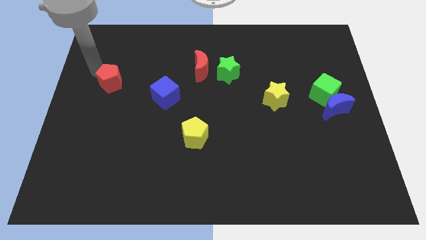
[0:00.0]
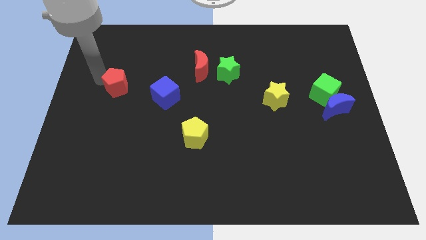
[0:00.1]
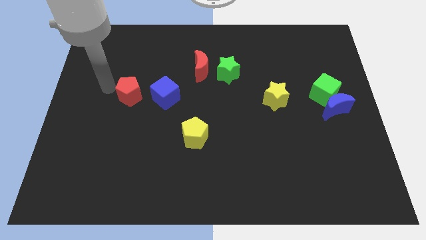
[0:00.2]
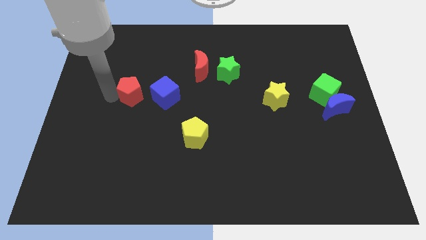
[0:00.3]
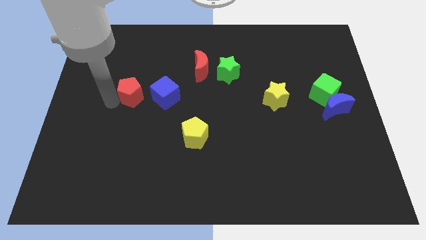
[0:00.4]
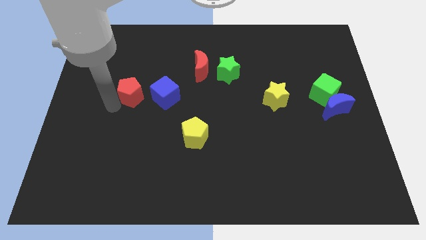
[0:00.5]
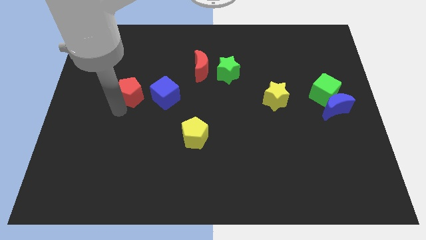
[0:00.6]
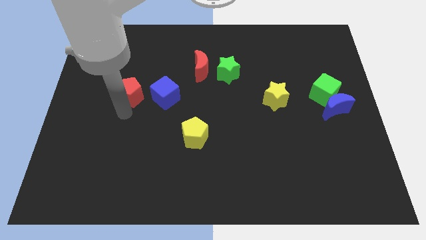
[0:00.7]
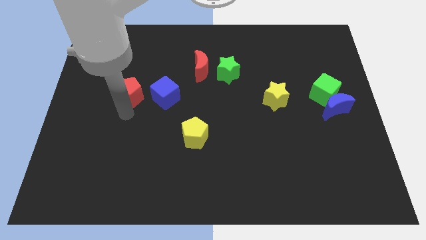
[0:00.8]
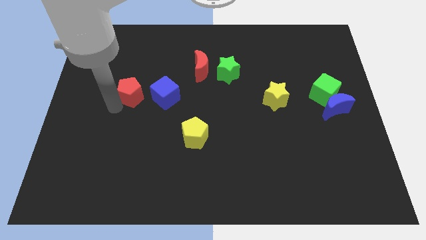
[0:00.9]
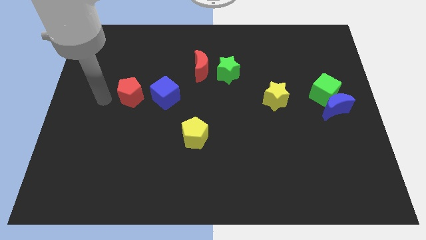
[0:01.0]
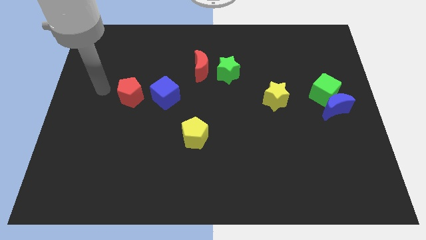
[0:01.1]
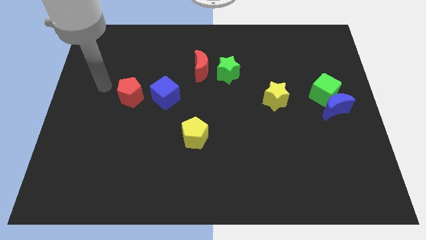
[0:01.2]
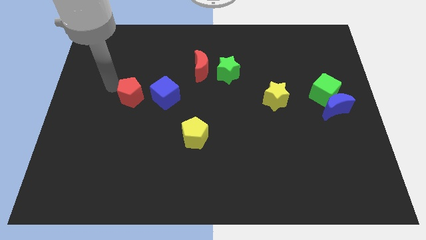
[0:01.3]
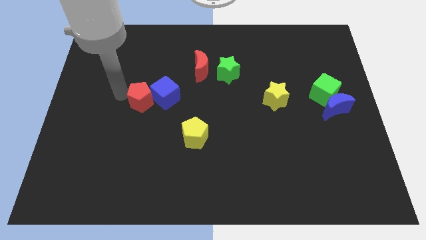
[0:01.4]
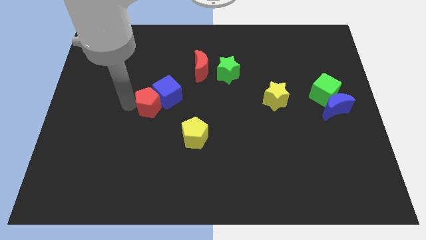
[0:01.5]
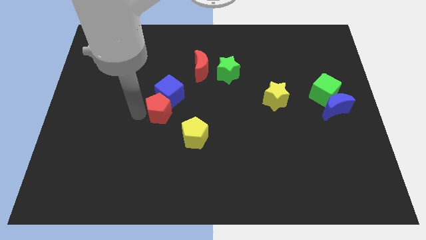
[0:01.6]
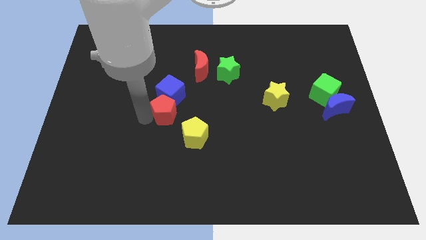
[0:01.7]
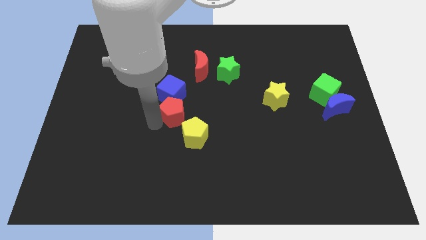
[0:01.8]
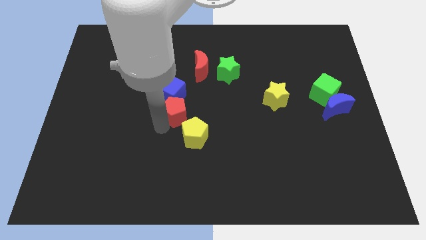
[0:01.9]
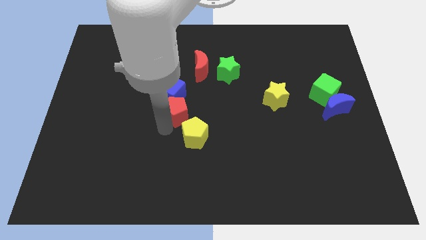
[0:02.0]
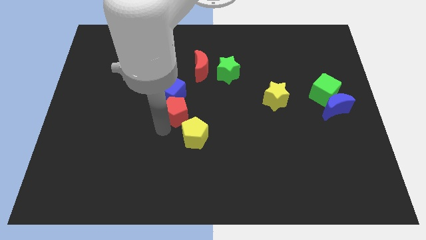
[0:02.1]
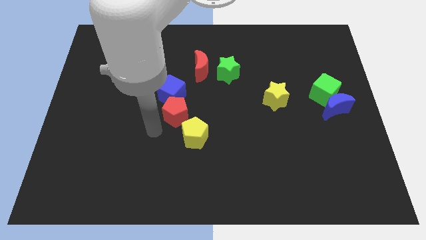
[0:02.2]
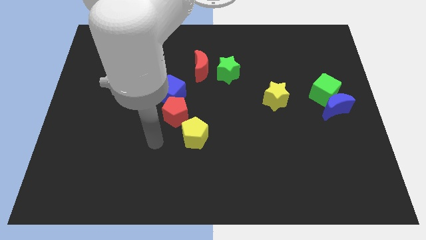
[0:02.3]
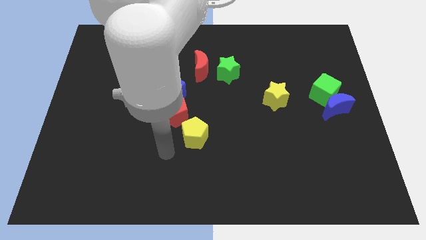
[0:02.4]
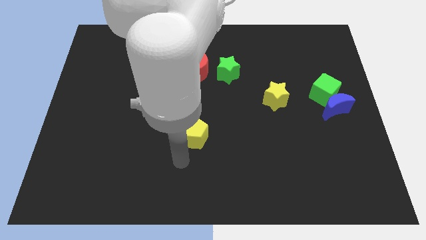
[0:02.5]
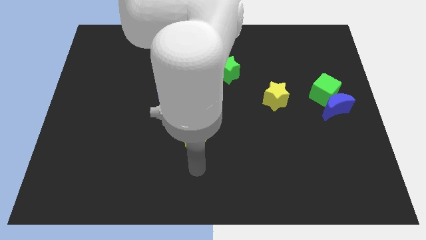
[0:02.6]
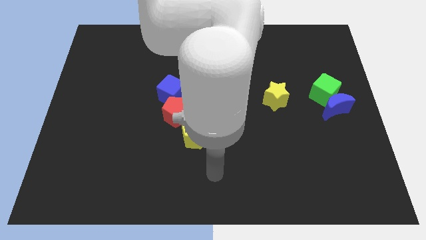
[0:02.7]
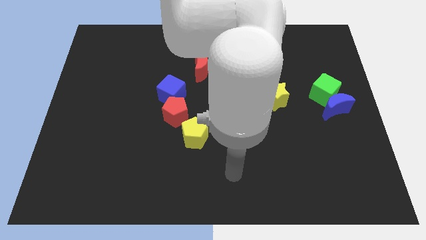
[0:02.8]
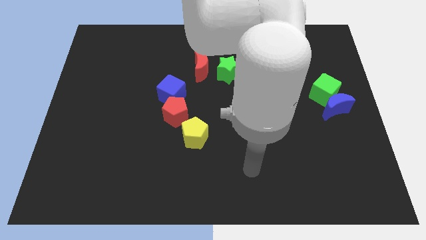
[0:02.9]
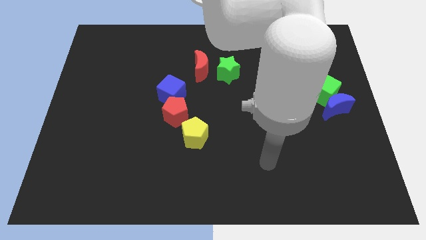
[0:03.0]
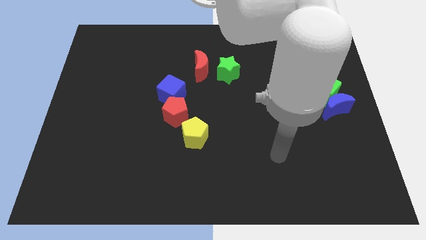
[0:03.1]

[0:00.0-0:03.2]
push the red pentagon towards the centre of the board

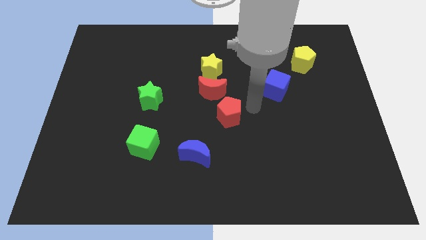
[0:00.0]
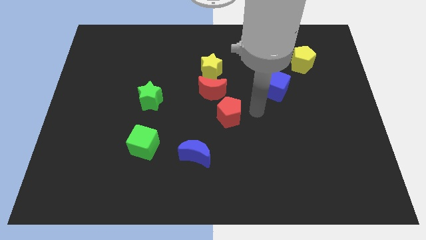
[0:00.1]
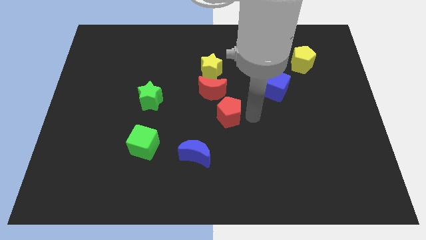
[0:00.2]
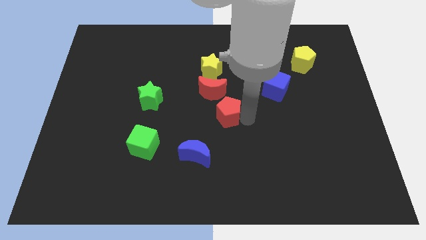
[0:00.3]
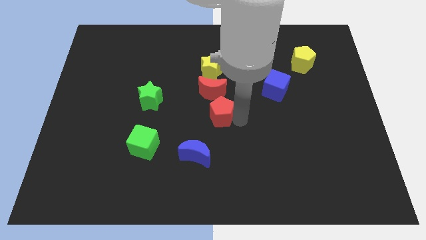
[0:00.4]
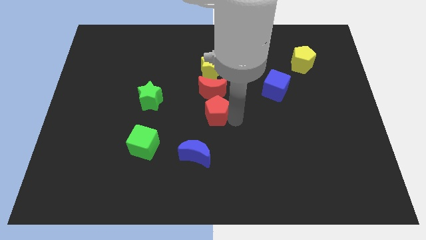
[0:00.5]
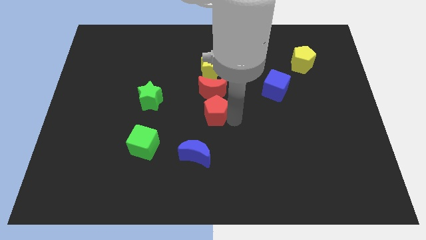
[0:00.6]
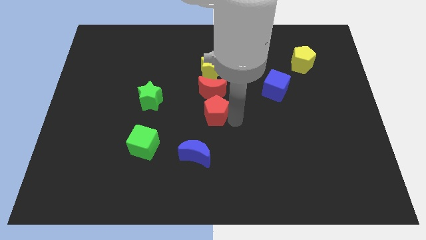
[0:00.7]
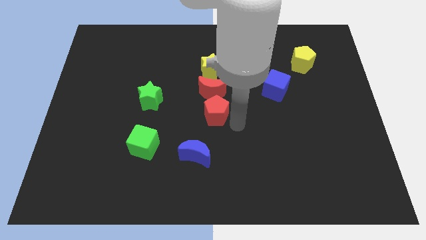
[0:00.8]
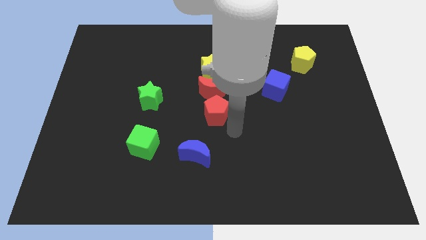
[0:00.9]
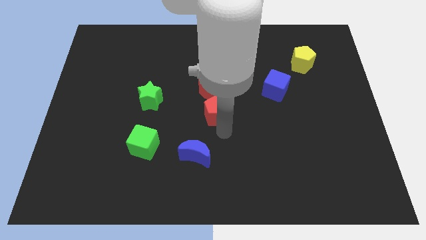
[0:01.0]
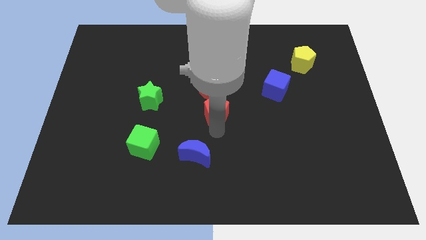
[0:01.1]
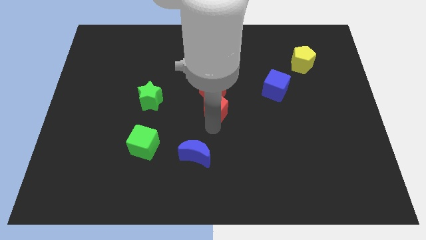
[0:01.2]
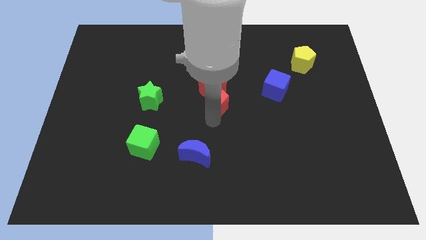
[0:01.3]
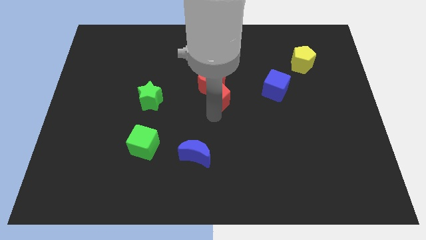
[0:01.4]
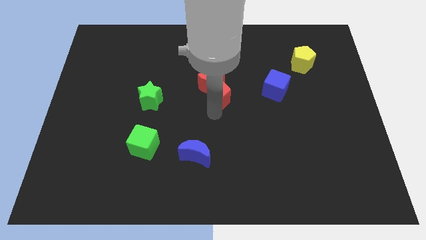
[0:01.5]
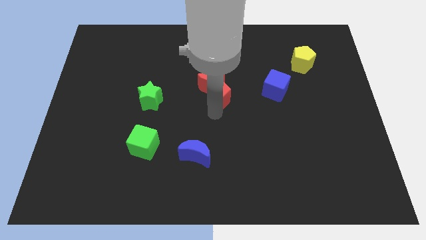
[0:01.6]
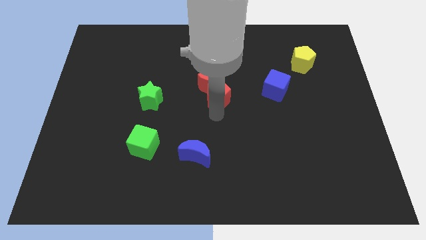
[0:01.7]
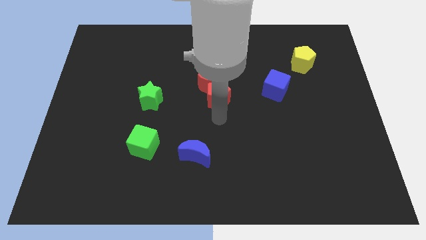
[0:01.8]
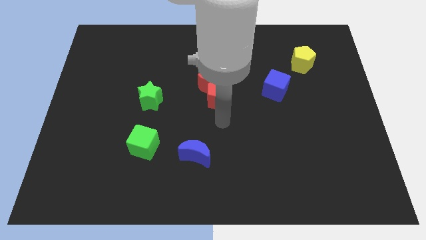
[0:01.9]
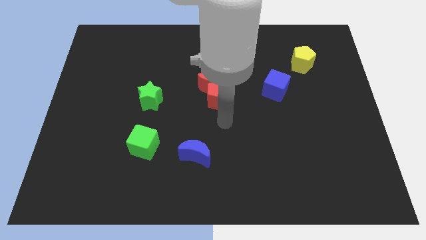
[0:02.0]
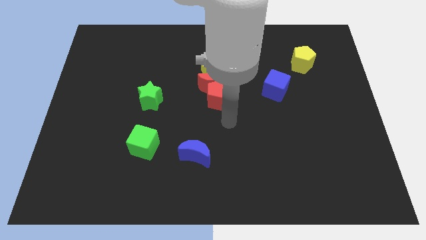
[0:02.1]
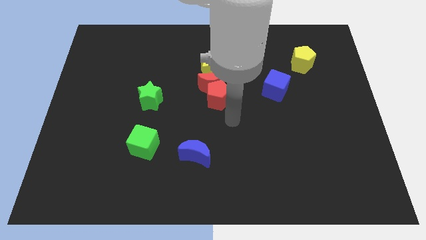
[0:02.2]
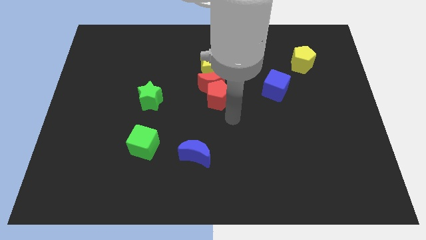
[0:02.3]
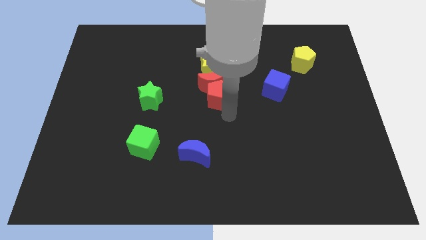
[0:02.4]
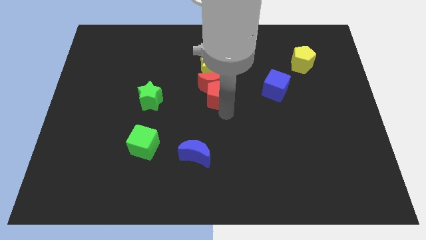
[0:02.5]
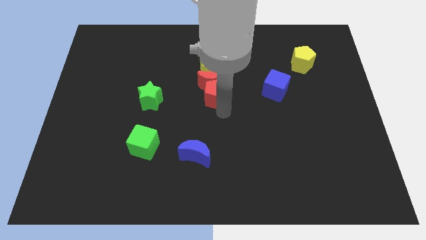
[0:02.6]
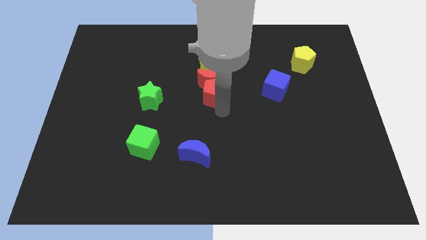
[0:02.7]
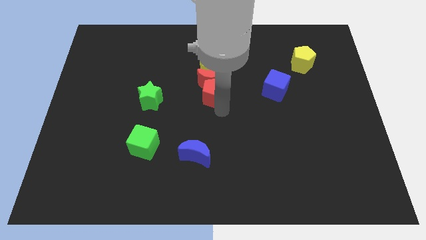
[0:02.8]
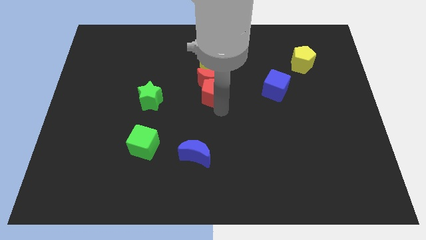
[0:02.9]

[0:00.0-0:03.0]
move the red pentagon along with the red moon to the bottom of the yellow star

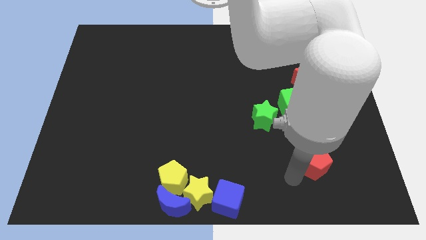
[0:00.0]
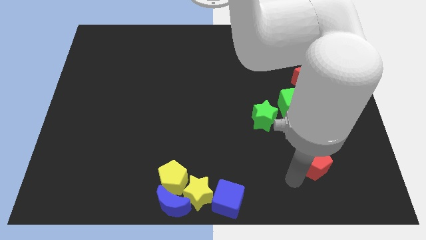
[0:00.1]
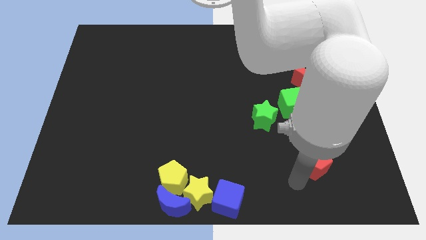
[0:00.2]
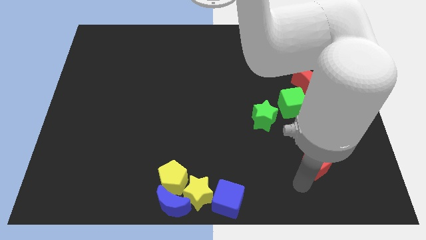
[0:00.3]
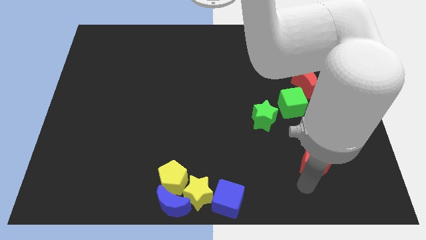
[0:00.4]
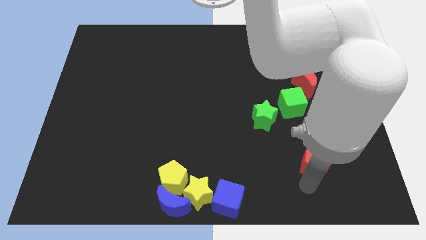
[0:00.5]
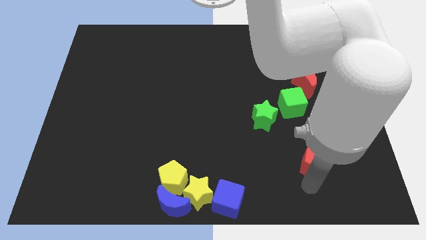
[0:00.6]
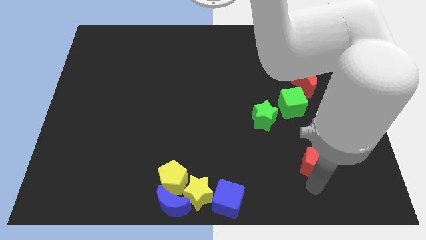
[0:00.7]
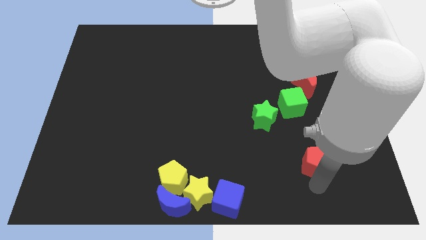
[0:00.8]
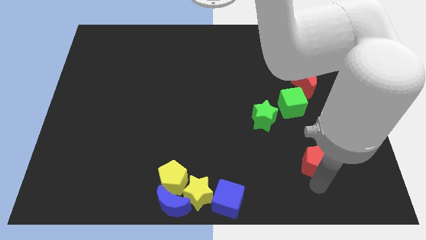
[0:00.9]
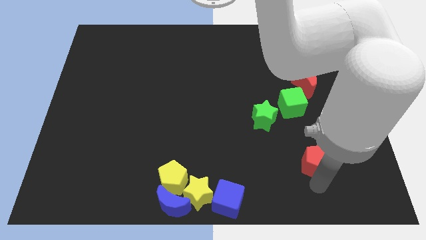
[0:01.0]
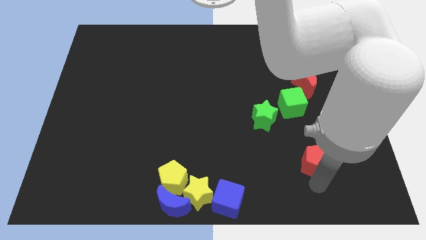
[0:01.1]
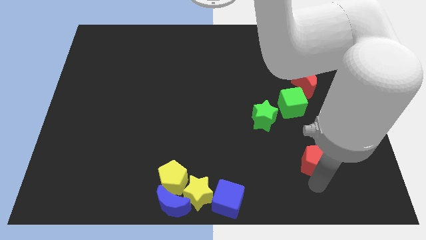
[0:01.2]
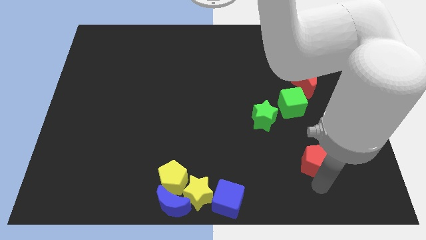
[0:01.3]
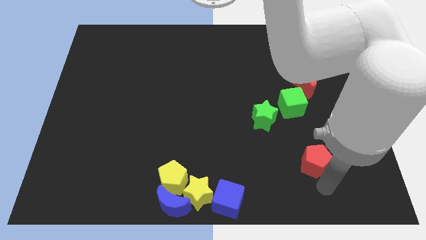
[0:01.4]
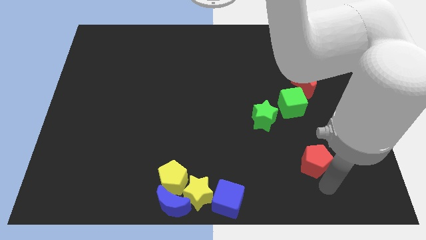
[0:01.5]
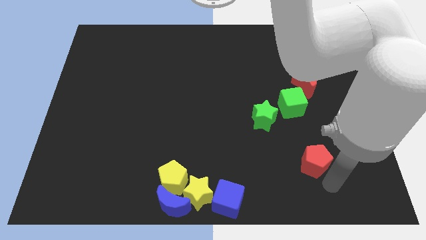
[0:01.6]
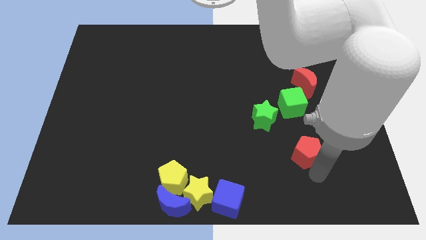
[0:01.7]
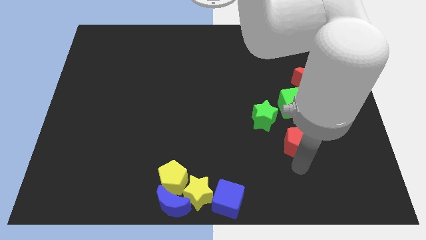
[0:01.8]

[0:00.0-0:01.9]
slightly push red pentagon to the bottom of the green cube

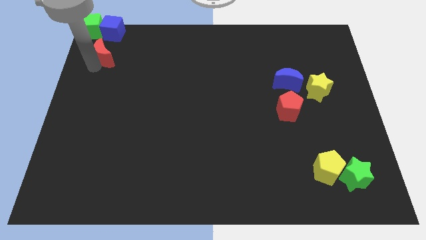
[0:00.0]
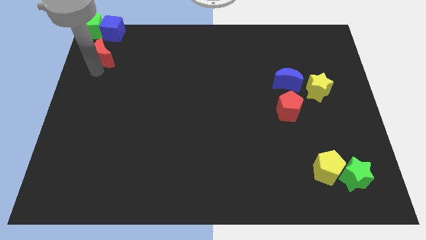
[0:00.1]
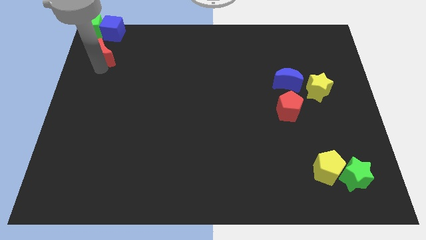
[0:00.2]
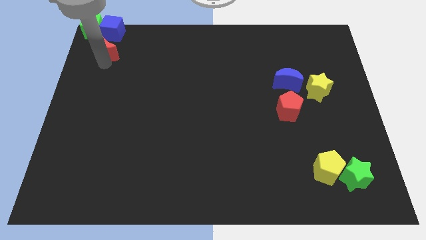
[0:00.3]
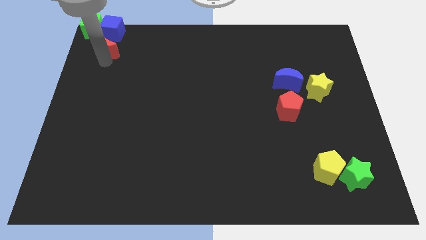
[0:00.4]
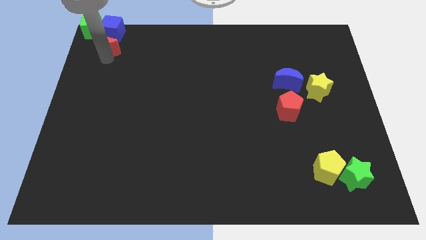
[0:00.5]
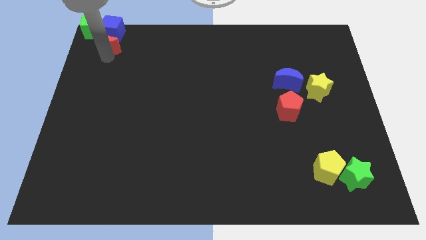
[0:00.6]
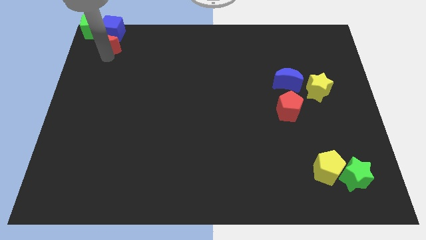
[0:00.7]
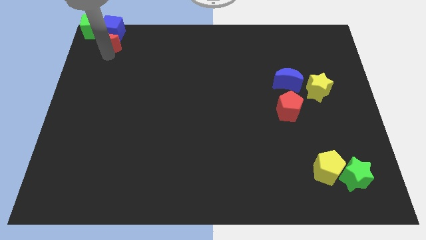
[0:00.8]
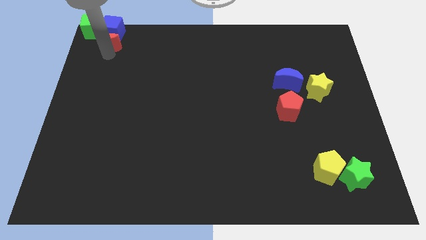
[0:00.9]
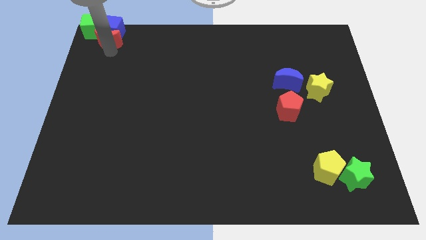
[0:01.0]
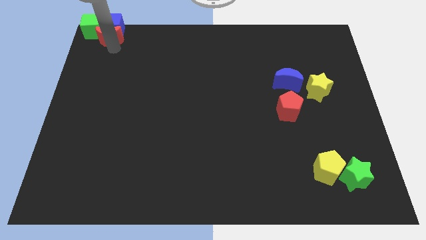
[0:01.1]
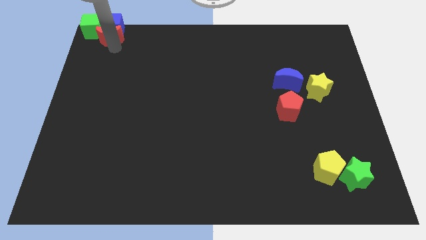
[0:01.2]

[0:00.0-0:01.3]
place the red moon close to the blue cube
